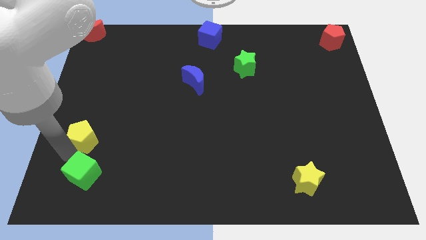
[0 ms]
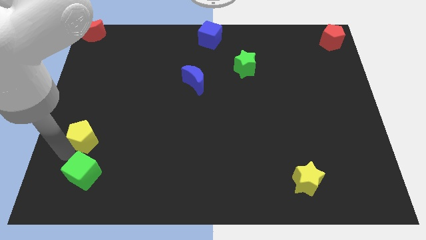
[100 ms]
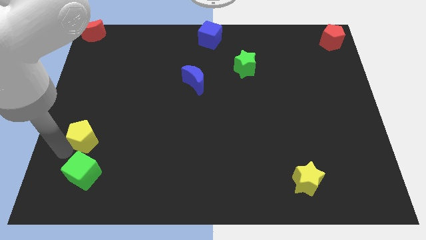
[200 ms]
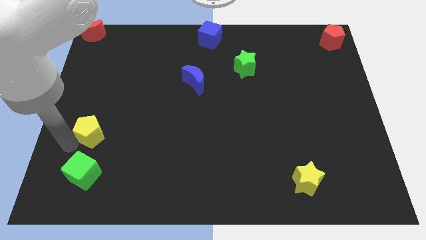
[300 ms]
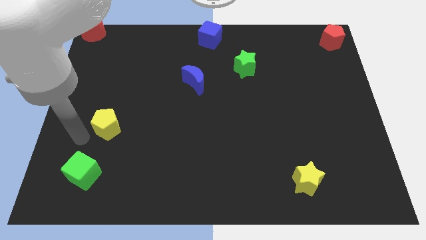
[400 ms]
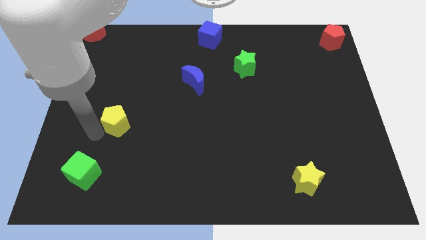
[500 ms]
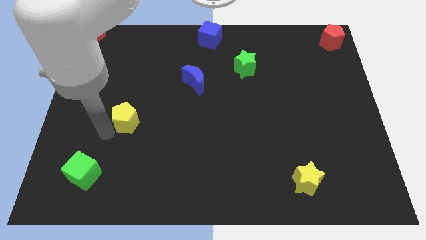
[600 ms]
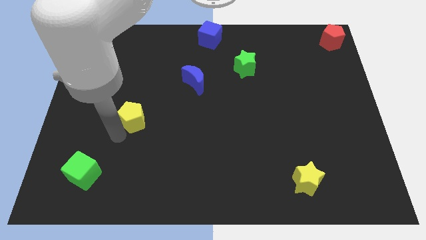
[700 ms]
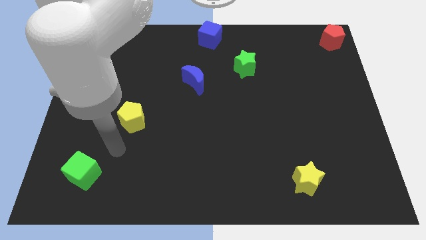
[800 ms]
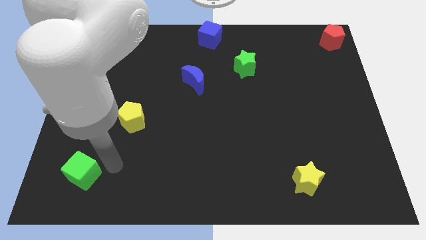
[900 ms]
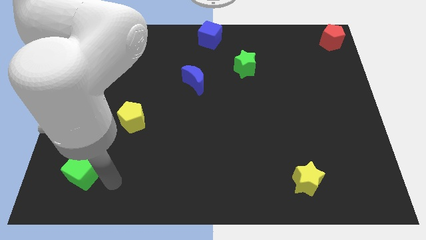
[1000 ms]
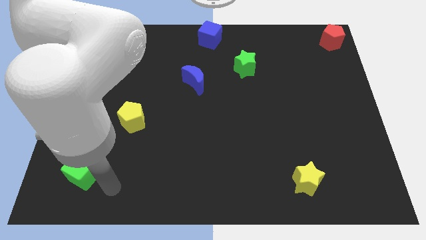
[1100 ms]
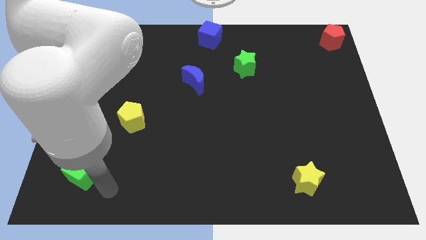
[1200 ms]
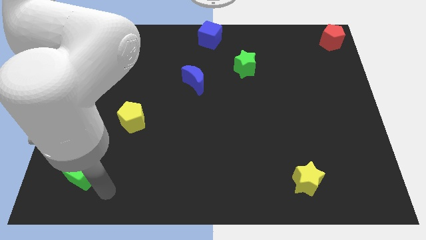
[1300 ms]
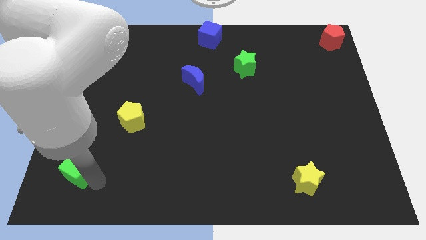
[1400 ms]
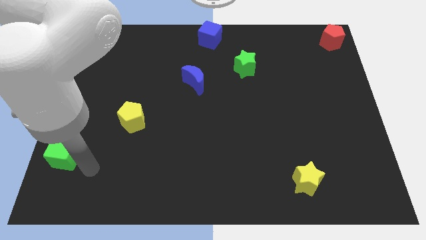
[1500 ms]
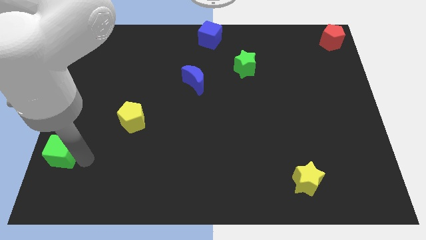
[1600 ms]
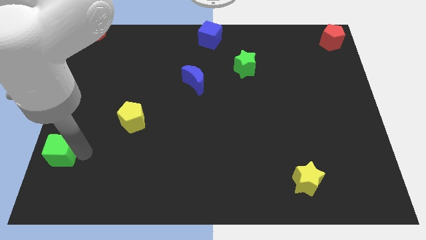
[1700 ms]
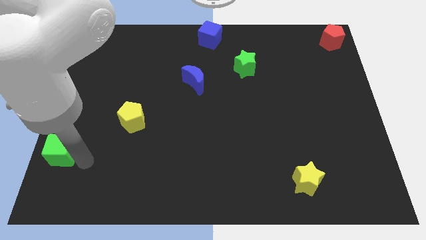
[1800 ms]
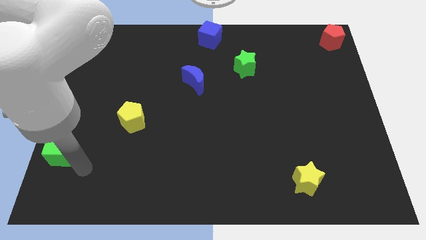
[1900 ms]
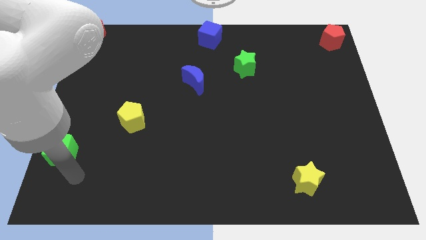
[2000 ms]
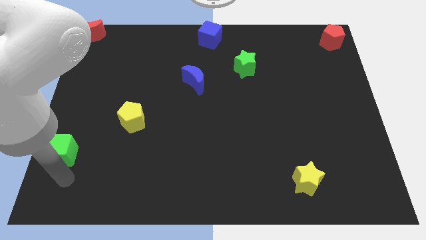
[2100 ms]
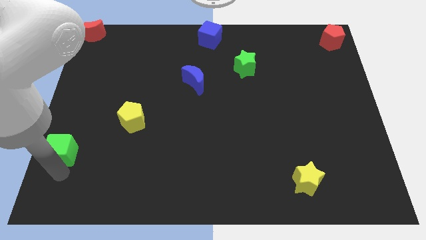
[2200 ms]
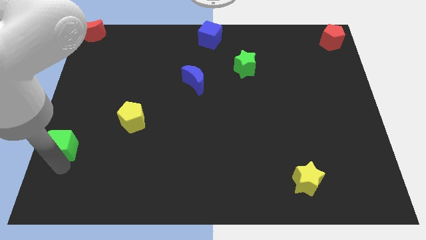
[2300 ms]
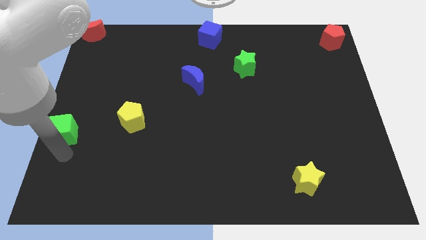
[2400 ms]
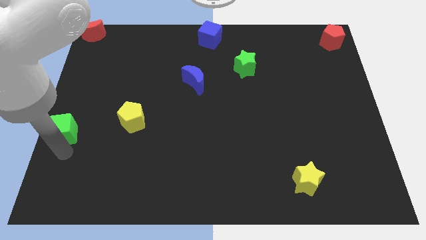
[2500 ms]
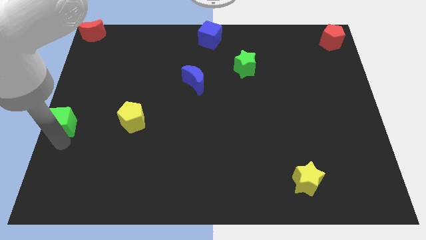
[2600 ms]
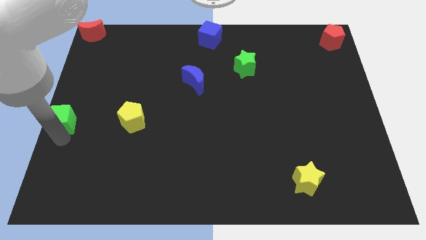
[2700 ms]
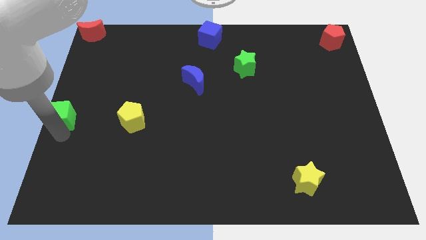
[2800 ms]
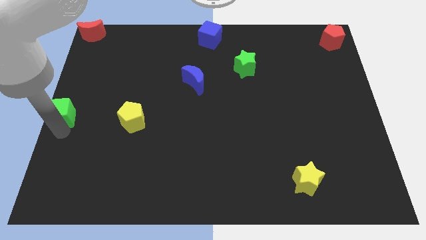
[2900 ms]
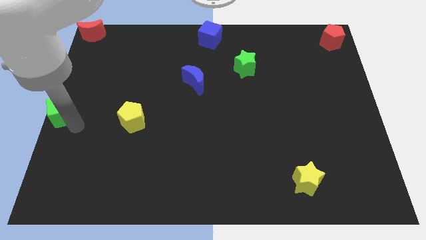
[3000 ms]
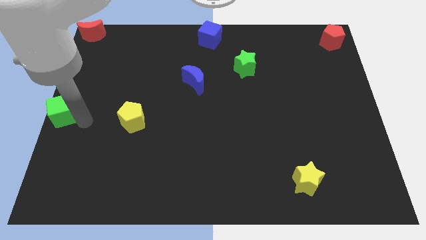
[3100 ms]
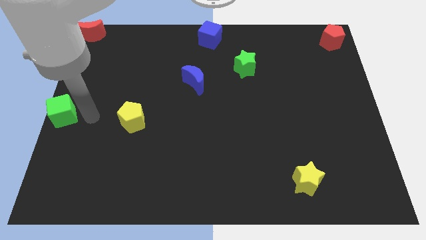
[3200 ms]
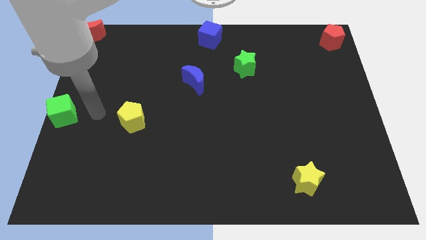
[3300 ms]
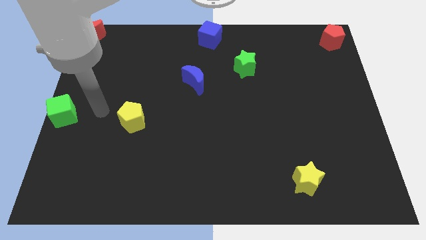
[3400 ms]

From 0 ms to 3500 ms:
separate yellow pentagon from green cube

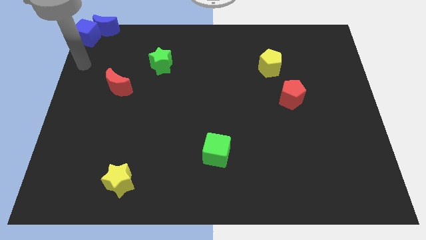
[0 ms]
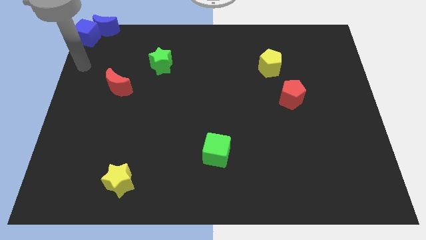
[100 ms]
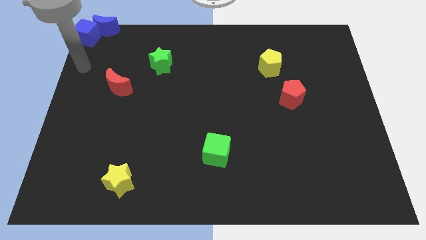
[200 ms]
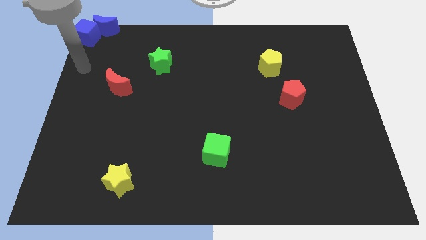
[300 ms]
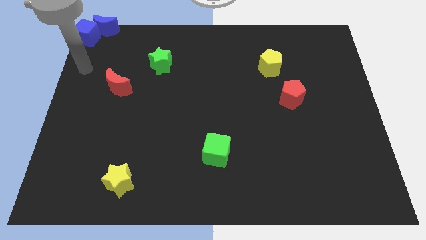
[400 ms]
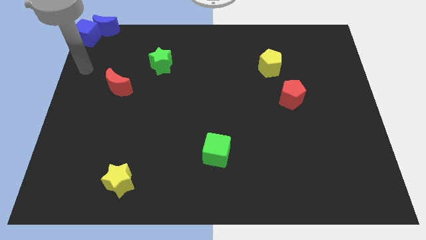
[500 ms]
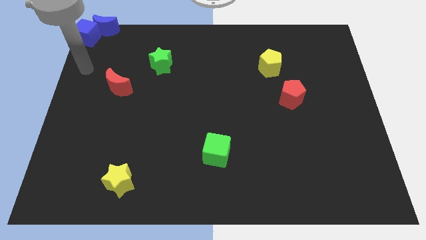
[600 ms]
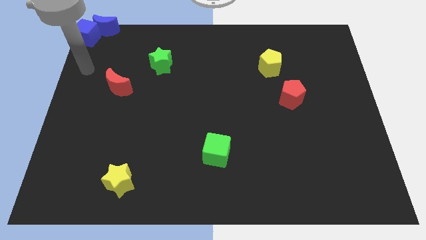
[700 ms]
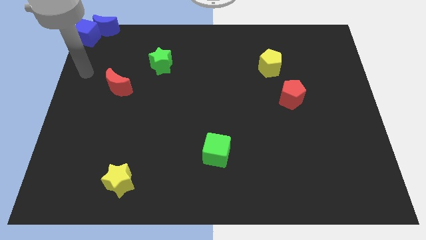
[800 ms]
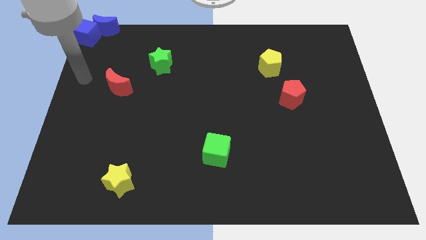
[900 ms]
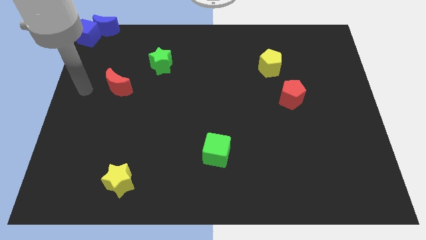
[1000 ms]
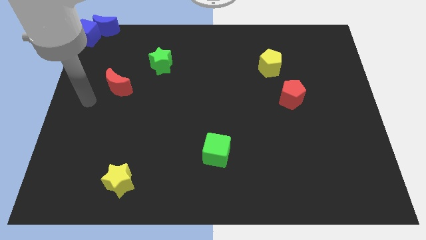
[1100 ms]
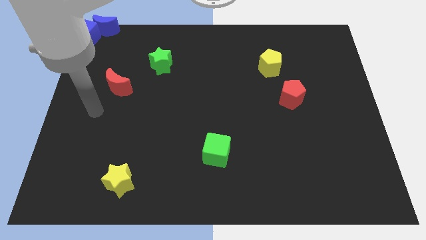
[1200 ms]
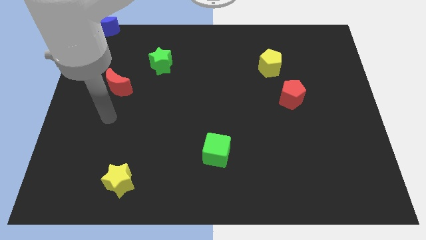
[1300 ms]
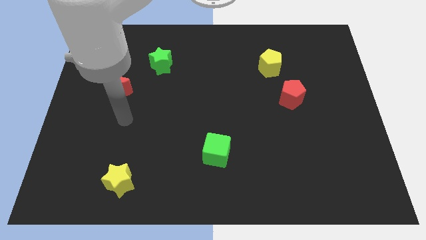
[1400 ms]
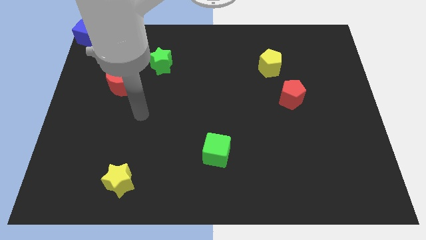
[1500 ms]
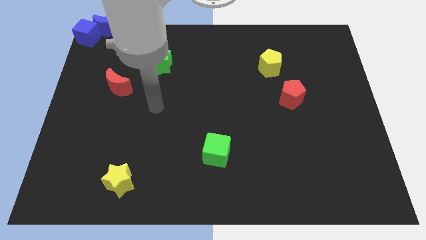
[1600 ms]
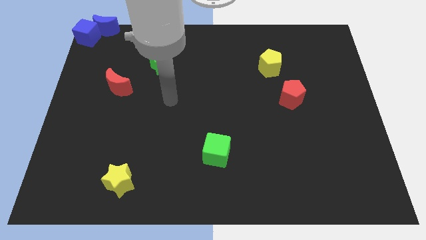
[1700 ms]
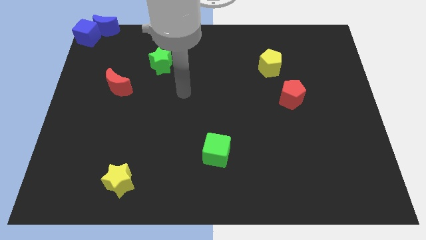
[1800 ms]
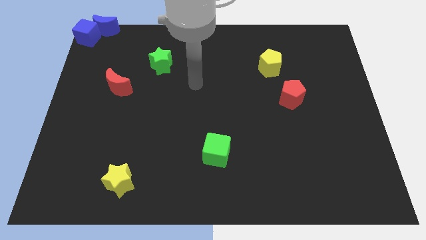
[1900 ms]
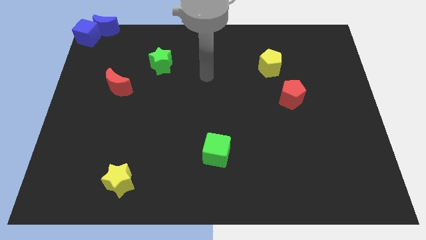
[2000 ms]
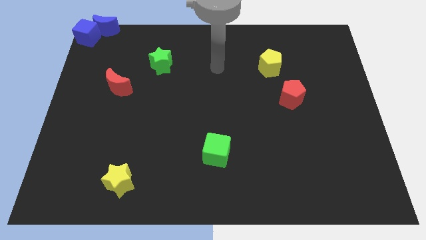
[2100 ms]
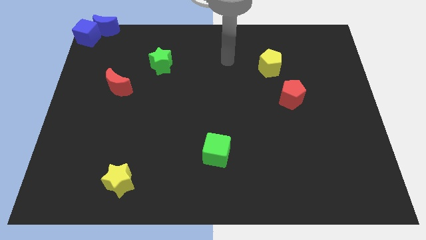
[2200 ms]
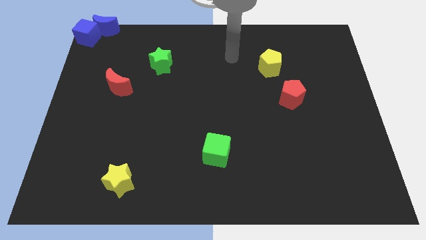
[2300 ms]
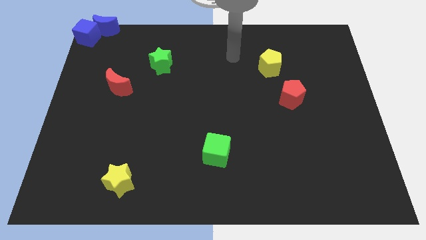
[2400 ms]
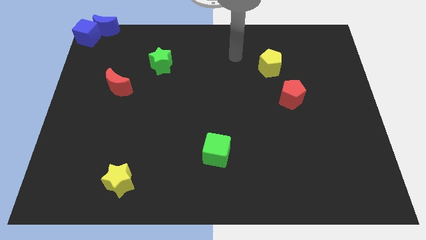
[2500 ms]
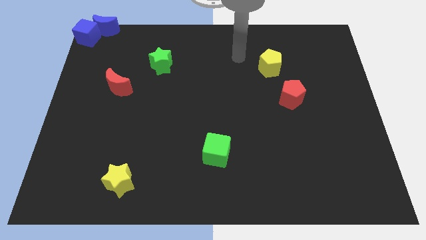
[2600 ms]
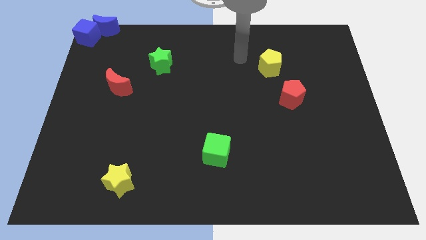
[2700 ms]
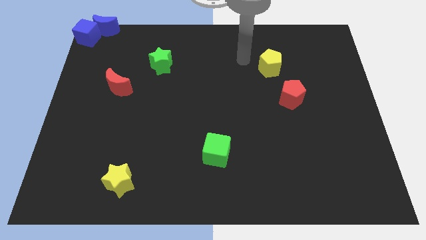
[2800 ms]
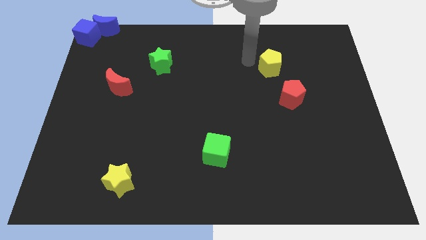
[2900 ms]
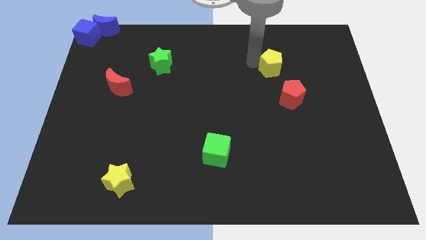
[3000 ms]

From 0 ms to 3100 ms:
move your arm to the top left of the yellow pentagon

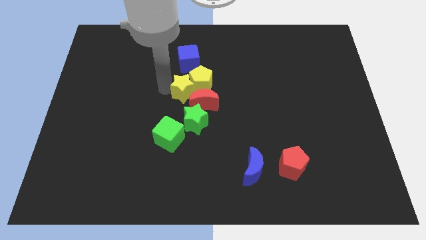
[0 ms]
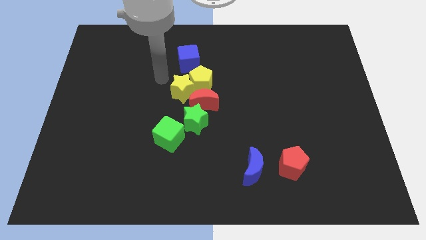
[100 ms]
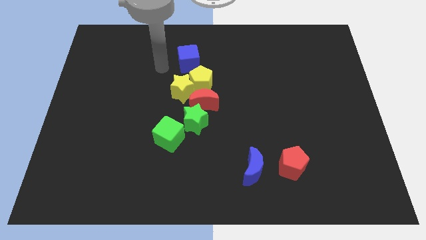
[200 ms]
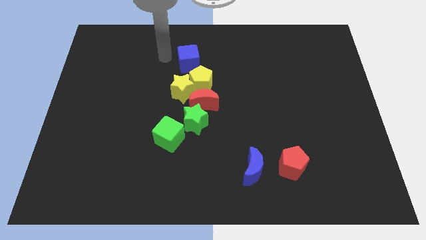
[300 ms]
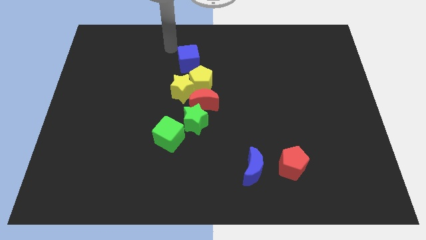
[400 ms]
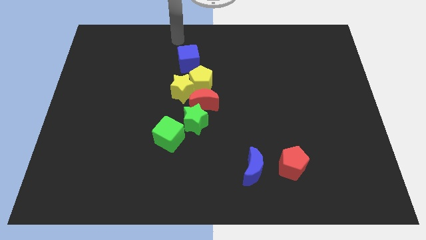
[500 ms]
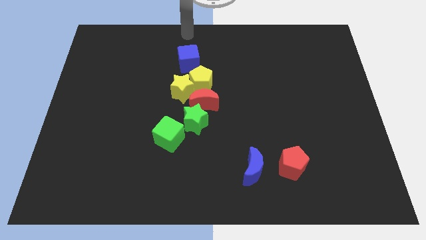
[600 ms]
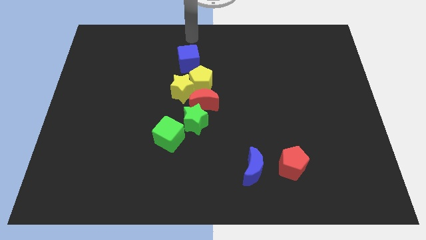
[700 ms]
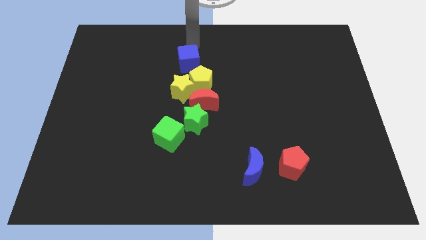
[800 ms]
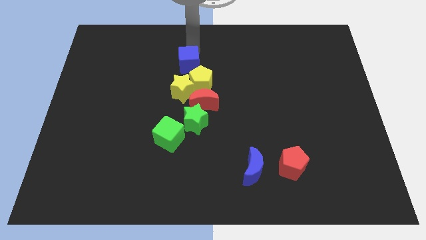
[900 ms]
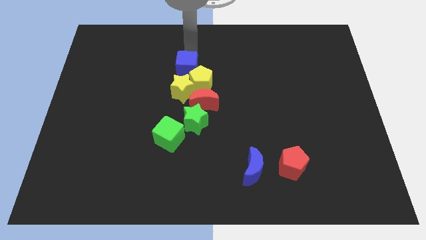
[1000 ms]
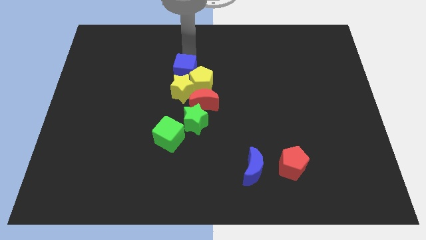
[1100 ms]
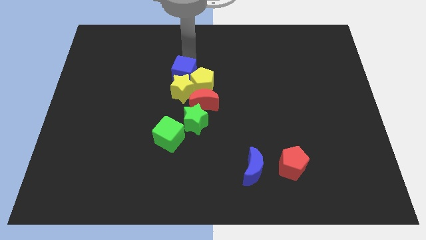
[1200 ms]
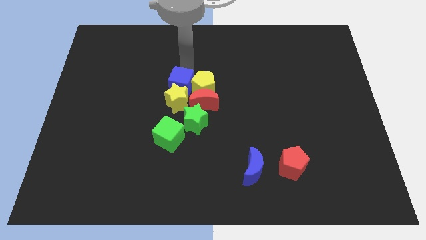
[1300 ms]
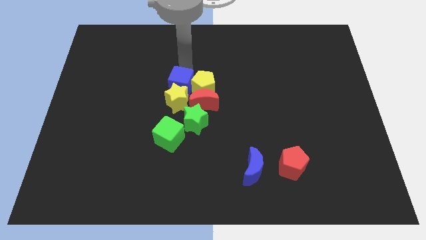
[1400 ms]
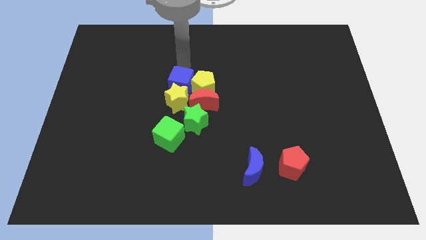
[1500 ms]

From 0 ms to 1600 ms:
move your arm away from the yellow star

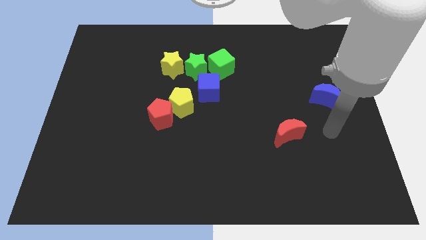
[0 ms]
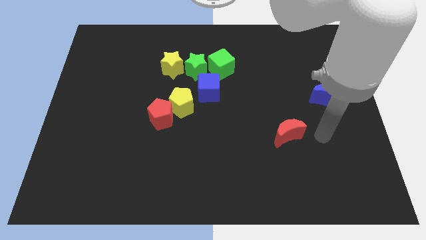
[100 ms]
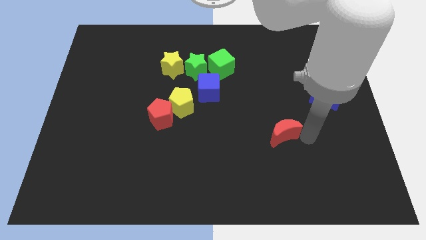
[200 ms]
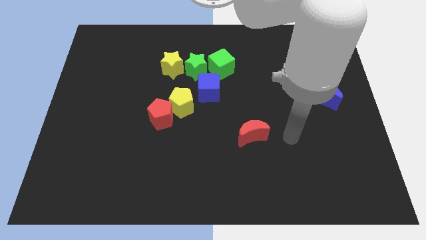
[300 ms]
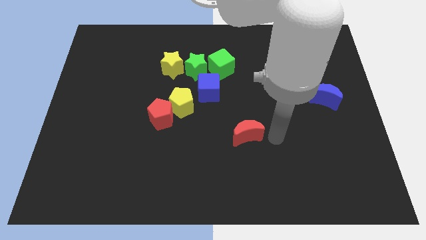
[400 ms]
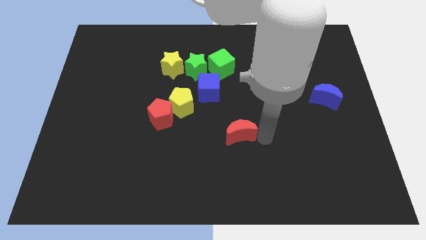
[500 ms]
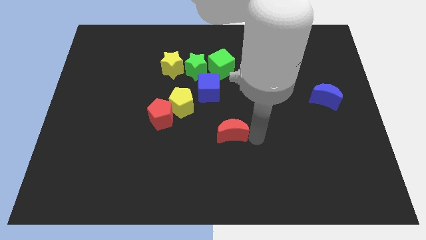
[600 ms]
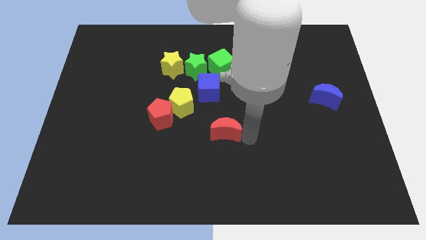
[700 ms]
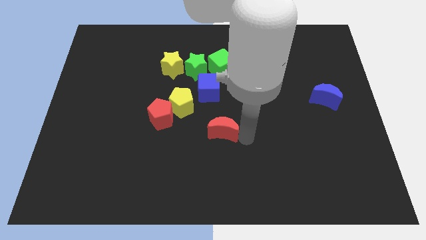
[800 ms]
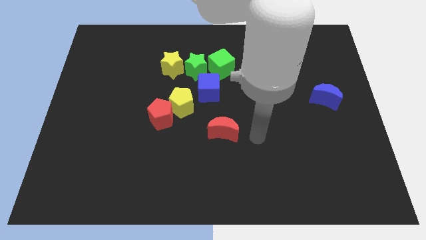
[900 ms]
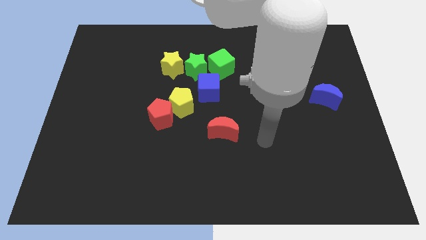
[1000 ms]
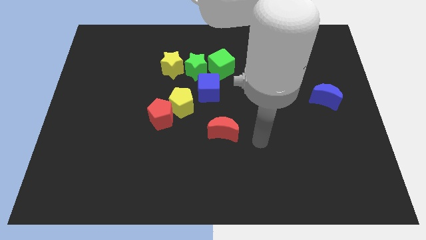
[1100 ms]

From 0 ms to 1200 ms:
move the red moon slightly left
